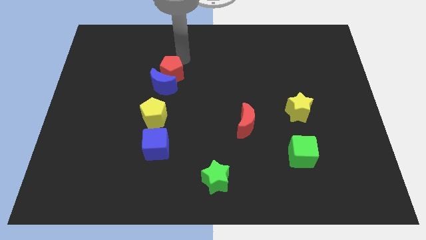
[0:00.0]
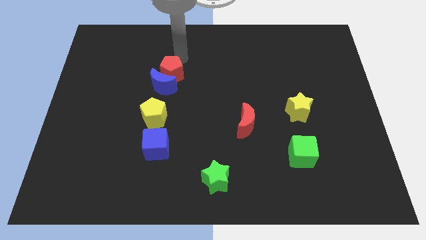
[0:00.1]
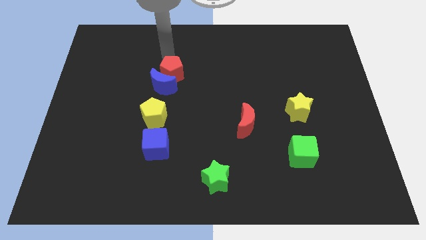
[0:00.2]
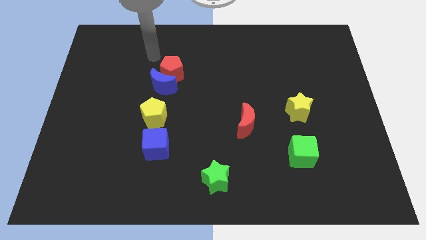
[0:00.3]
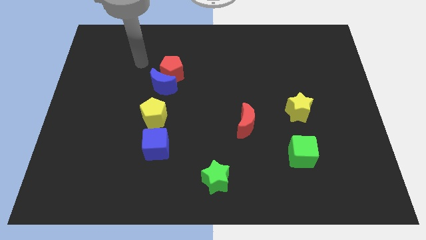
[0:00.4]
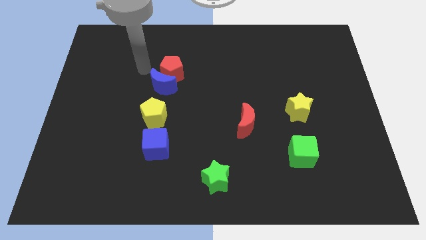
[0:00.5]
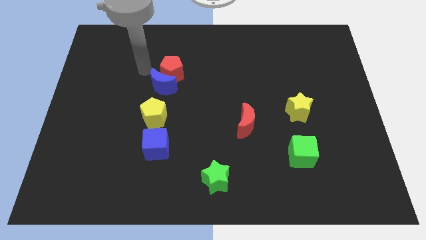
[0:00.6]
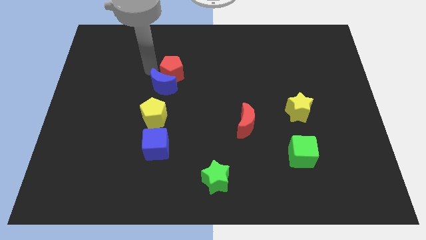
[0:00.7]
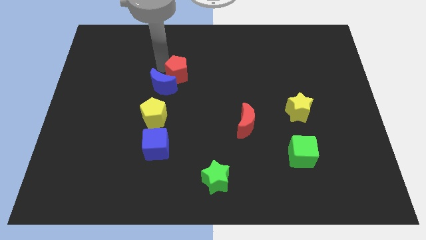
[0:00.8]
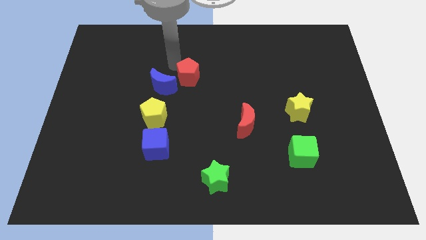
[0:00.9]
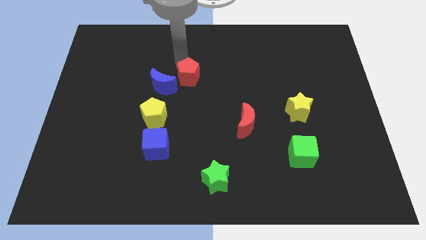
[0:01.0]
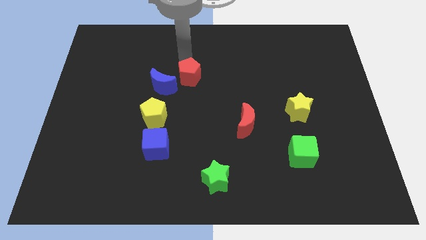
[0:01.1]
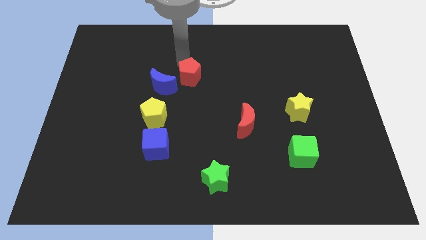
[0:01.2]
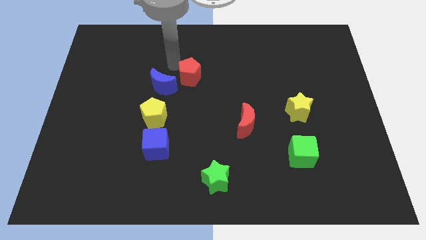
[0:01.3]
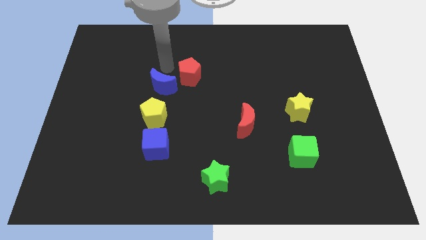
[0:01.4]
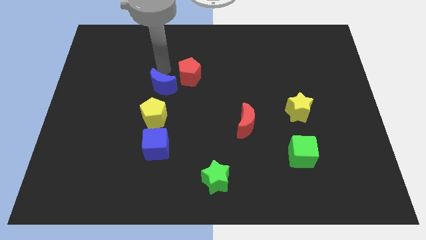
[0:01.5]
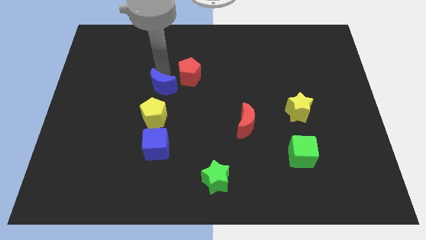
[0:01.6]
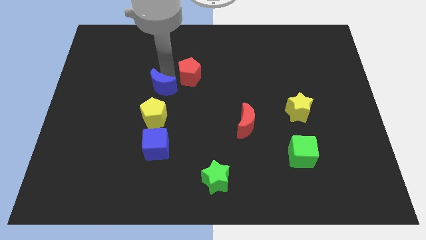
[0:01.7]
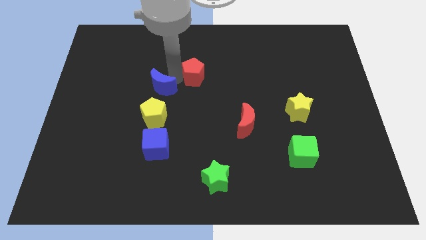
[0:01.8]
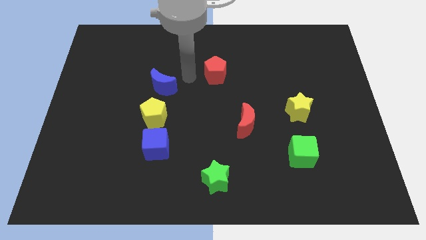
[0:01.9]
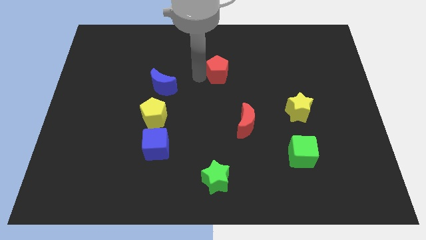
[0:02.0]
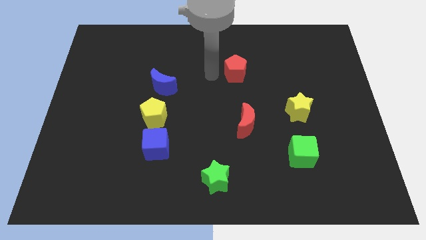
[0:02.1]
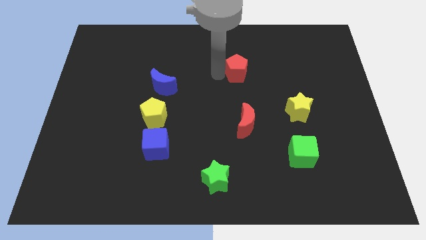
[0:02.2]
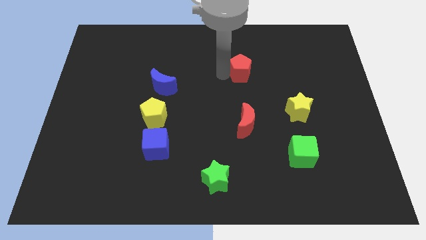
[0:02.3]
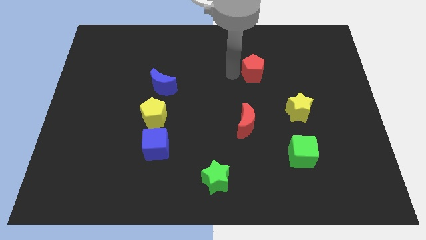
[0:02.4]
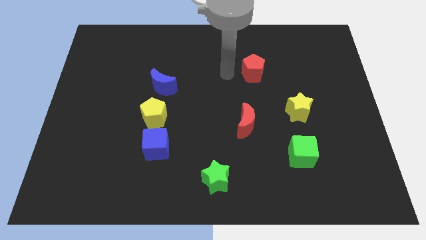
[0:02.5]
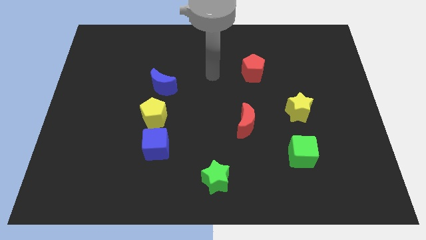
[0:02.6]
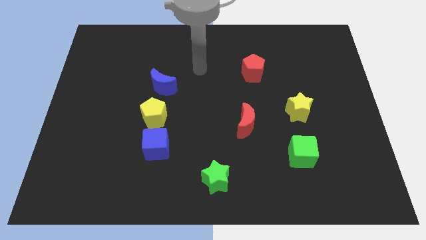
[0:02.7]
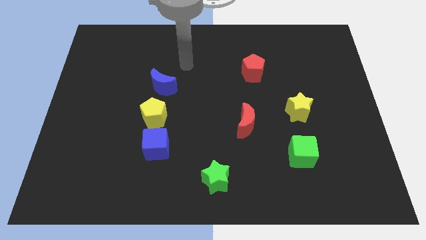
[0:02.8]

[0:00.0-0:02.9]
move the red pentagon to the top of the red crescent

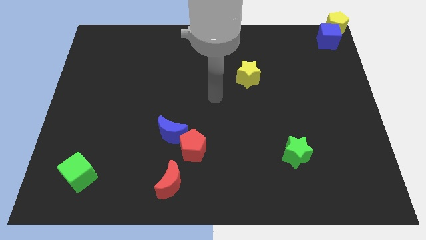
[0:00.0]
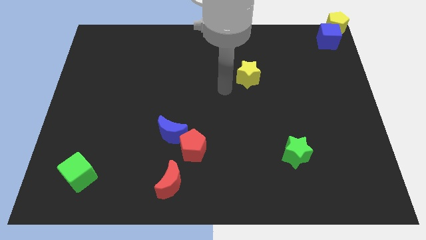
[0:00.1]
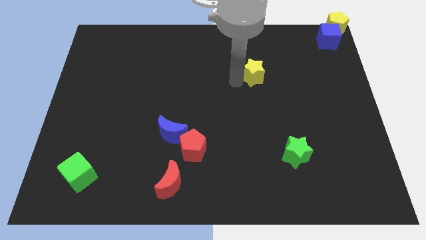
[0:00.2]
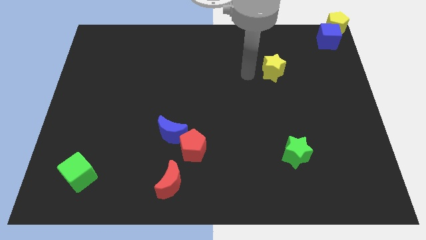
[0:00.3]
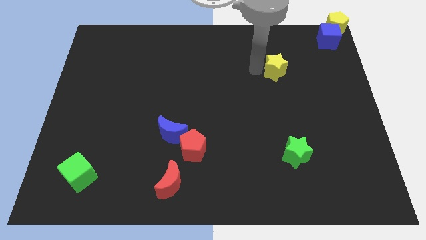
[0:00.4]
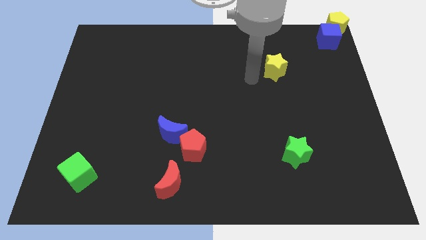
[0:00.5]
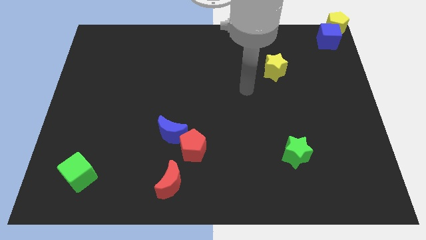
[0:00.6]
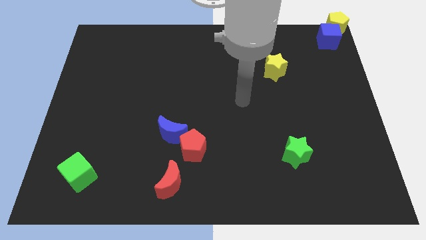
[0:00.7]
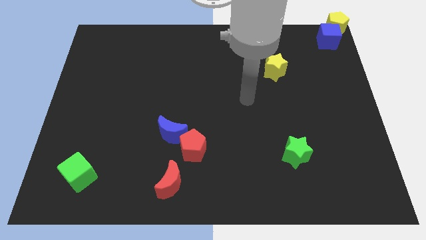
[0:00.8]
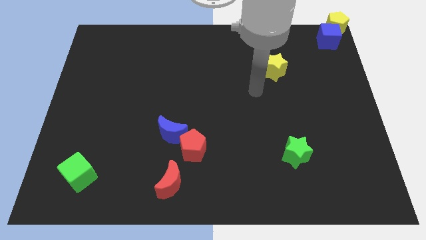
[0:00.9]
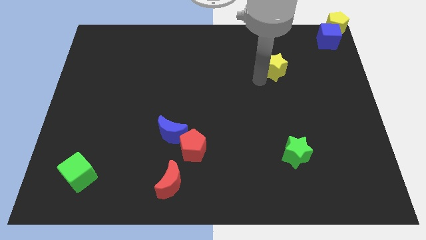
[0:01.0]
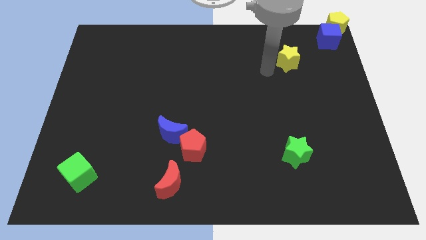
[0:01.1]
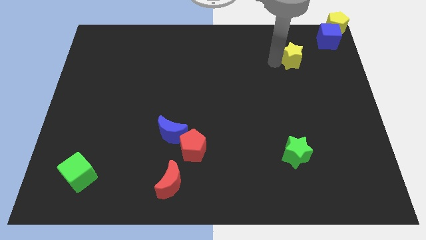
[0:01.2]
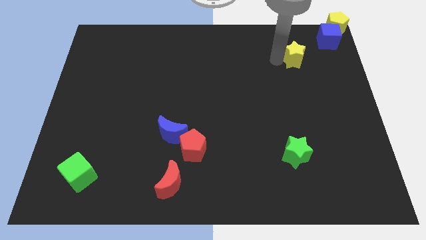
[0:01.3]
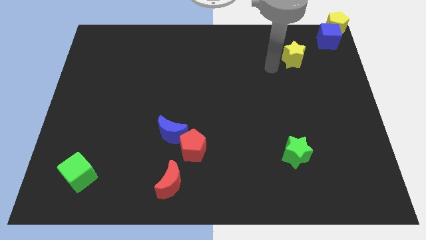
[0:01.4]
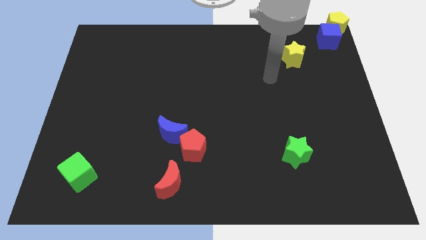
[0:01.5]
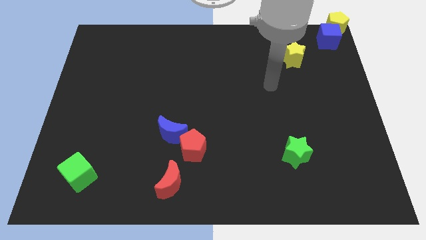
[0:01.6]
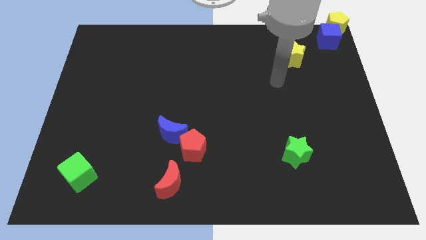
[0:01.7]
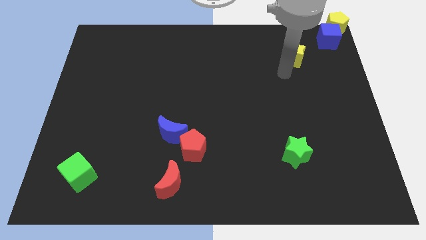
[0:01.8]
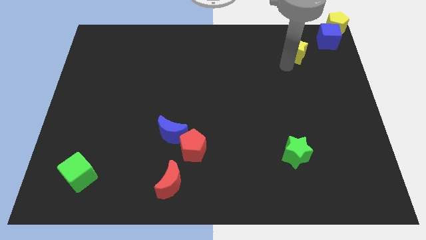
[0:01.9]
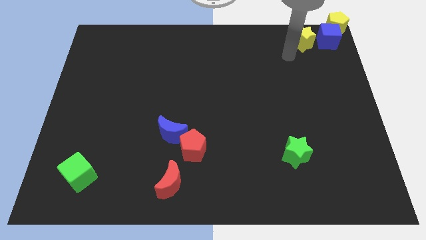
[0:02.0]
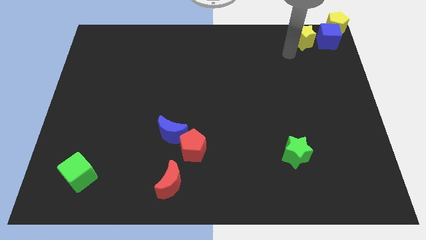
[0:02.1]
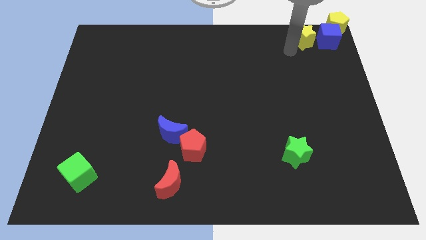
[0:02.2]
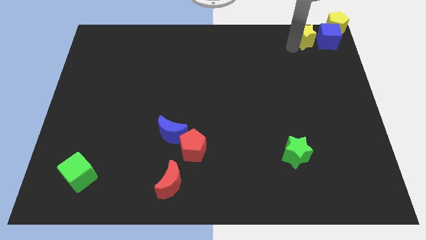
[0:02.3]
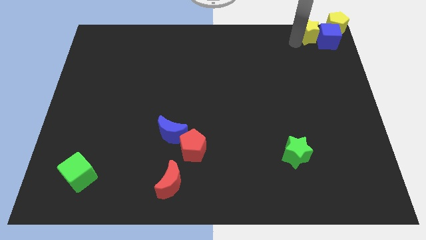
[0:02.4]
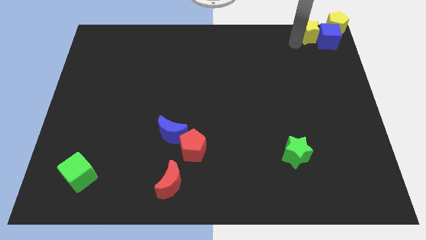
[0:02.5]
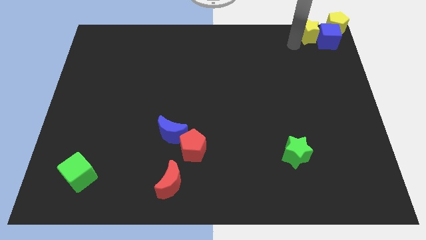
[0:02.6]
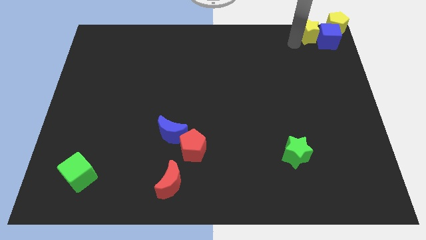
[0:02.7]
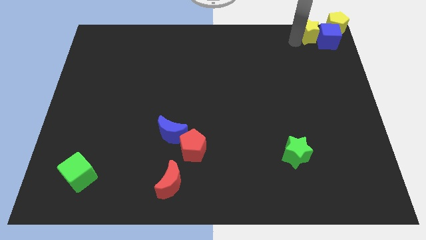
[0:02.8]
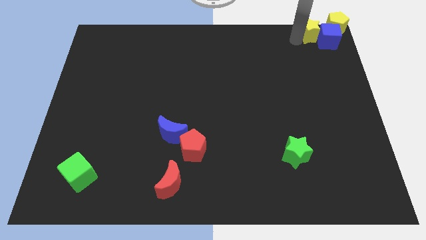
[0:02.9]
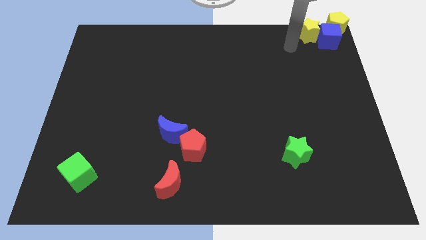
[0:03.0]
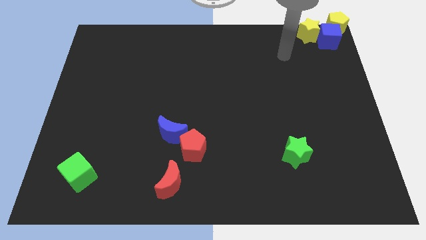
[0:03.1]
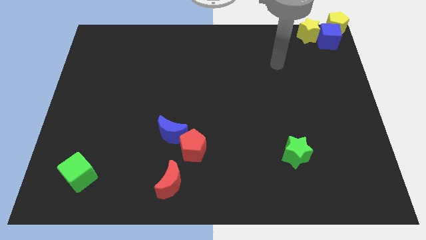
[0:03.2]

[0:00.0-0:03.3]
push the yellow star into the blue cube

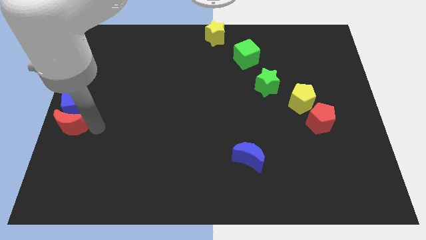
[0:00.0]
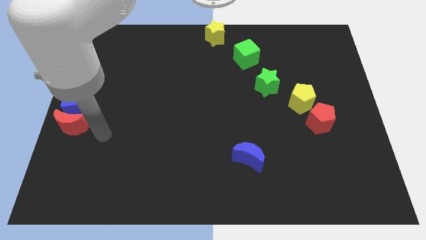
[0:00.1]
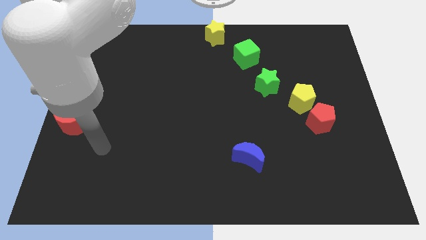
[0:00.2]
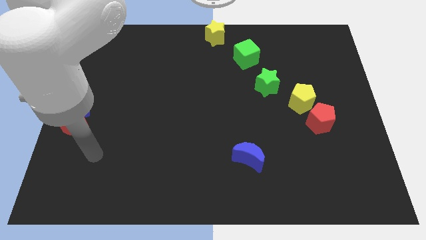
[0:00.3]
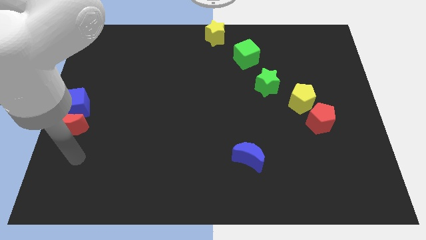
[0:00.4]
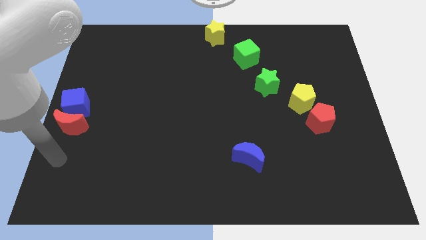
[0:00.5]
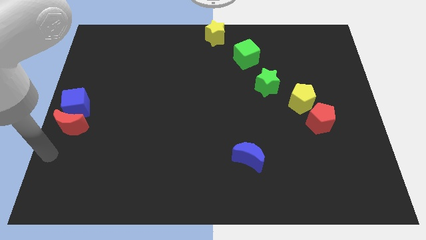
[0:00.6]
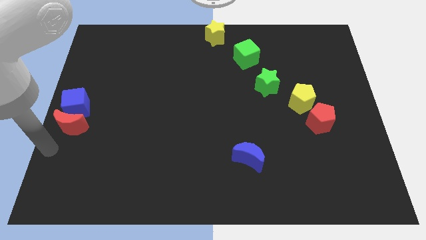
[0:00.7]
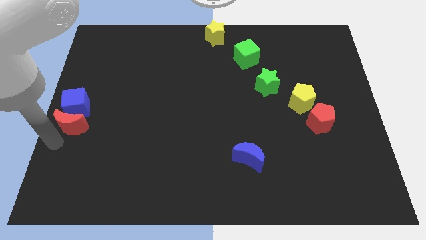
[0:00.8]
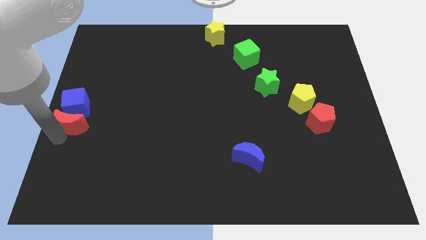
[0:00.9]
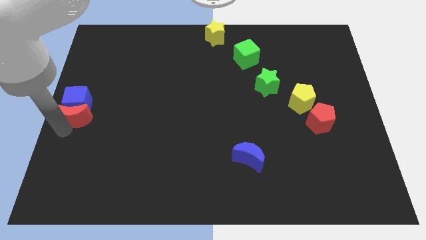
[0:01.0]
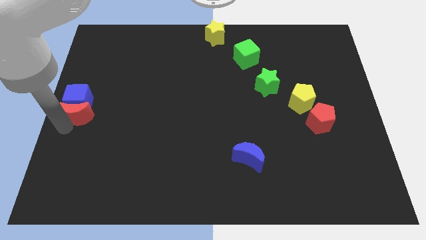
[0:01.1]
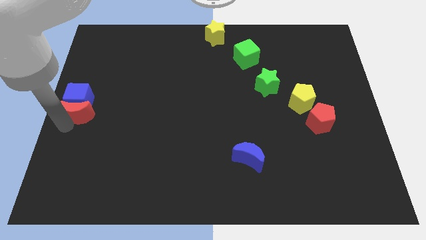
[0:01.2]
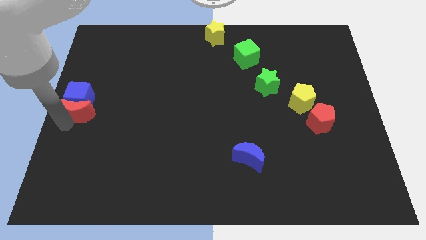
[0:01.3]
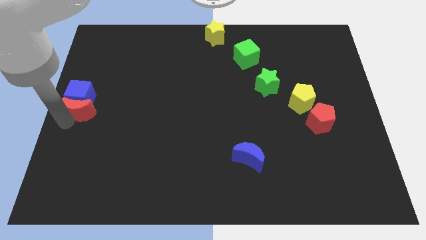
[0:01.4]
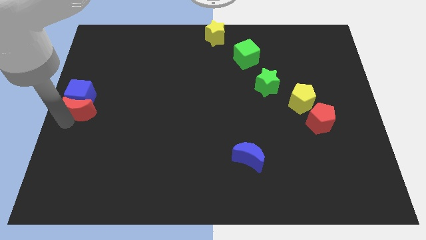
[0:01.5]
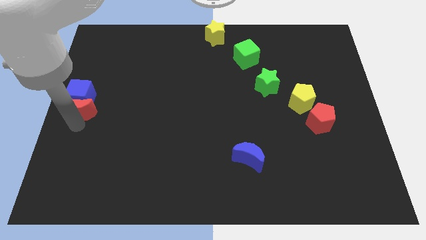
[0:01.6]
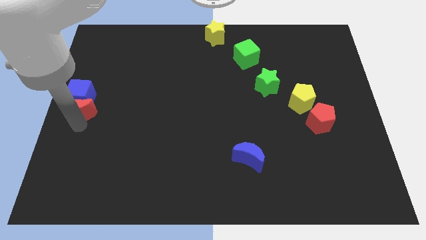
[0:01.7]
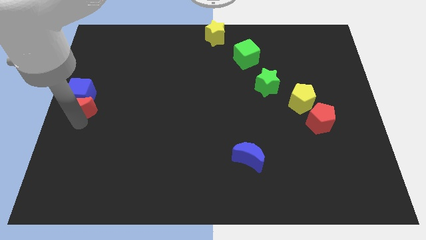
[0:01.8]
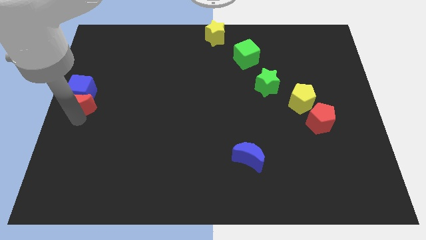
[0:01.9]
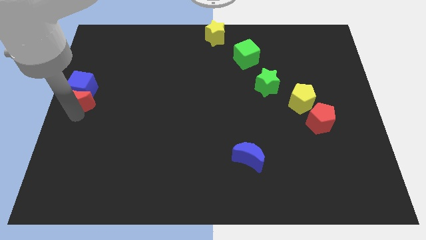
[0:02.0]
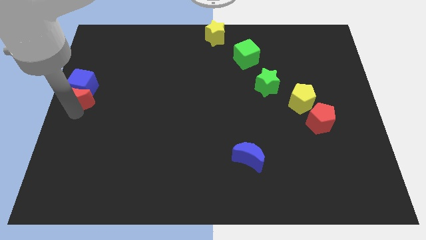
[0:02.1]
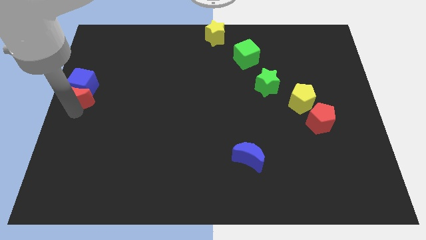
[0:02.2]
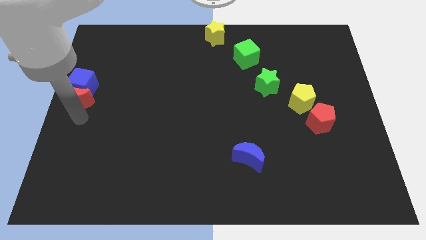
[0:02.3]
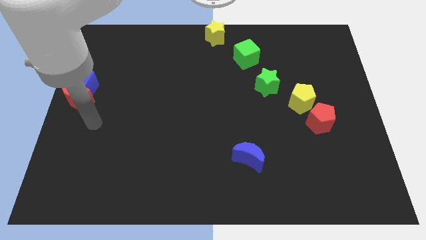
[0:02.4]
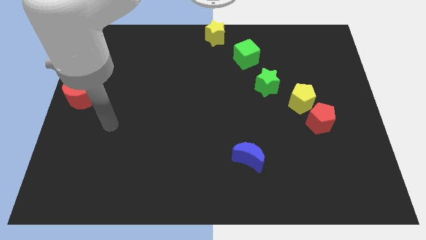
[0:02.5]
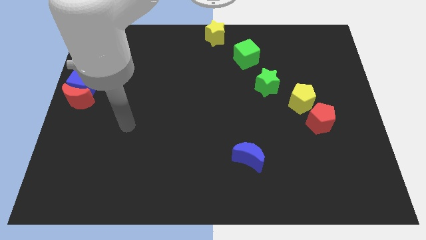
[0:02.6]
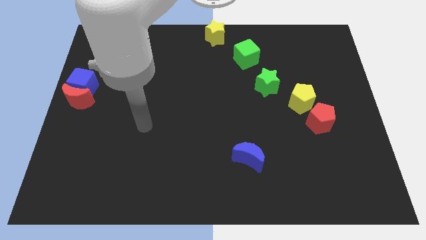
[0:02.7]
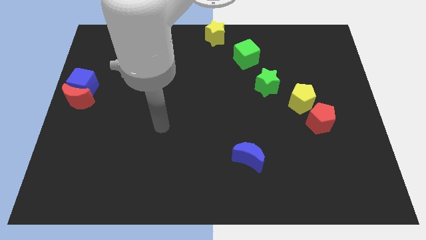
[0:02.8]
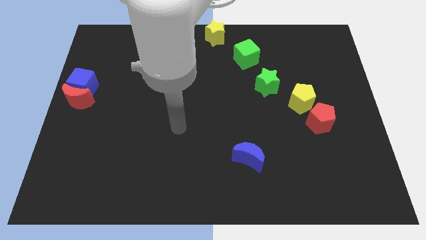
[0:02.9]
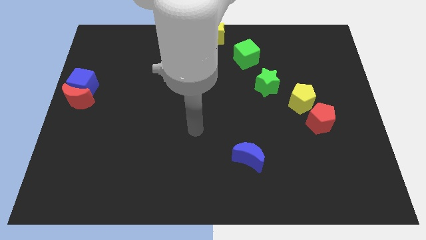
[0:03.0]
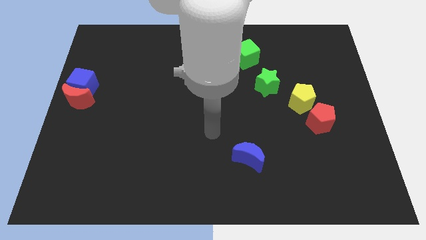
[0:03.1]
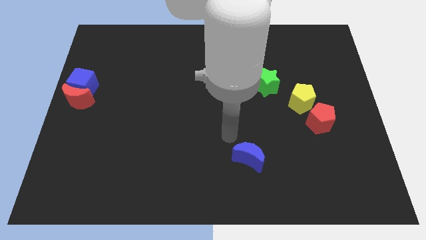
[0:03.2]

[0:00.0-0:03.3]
move the red moon and the blue cube slightly upwards
